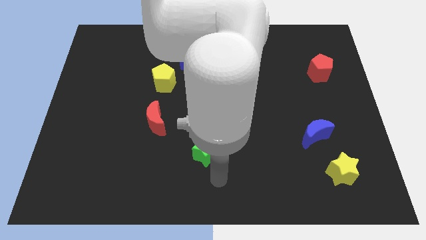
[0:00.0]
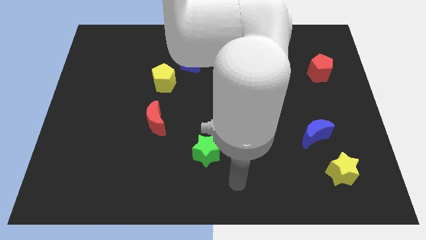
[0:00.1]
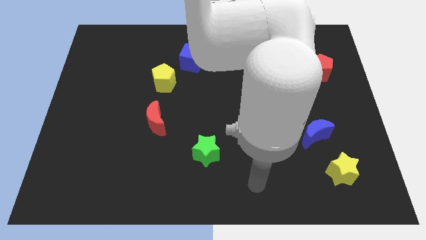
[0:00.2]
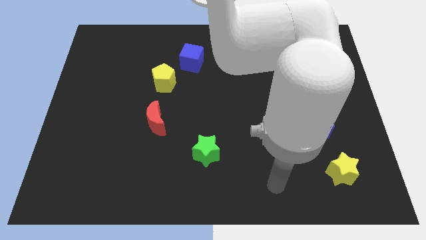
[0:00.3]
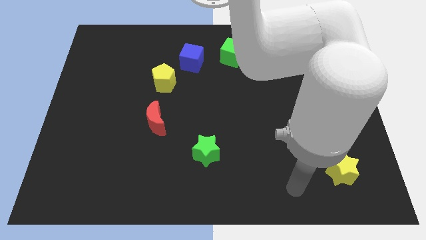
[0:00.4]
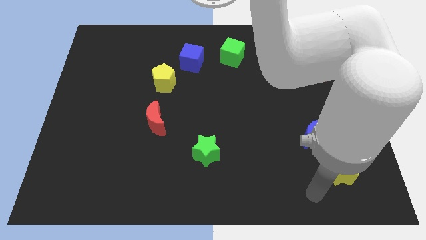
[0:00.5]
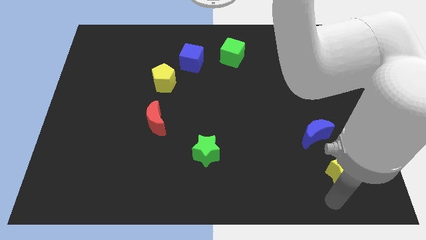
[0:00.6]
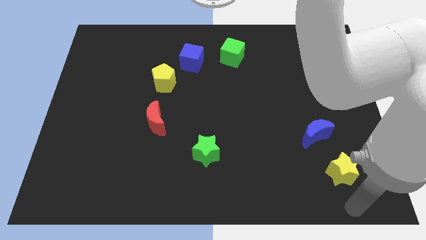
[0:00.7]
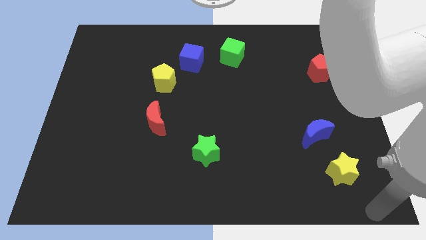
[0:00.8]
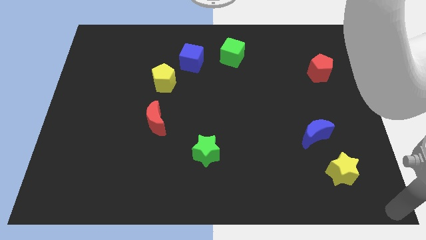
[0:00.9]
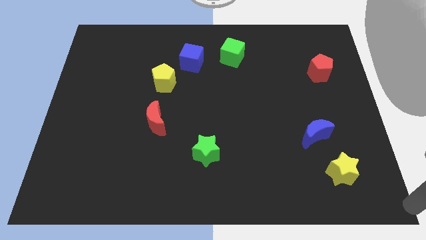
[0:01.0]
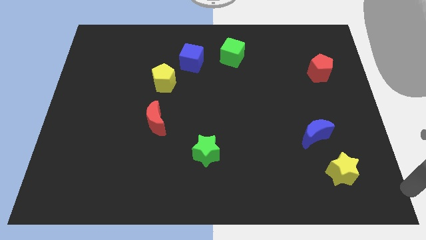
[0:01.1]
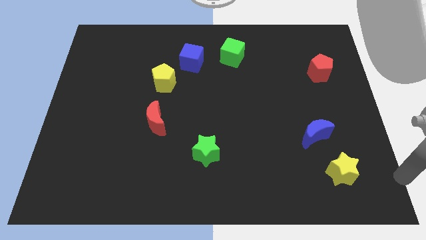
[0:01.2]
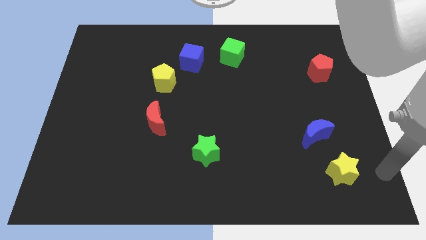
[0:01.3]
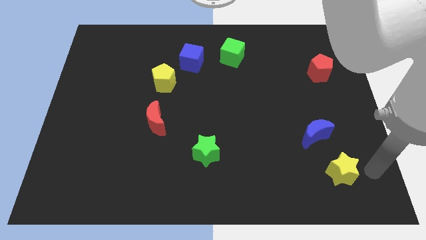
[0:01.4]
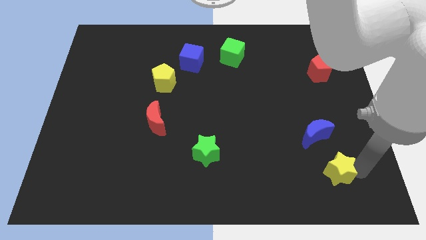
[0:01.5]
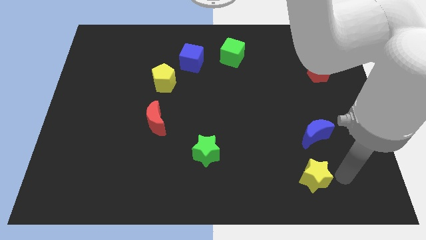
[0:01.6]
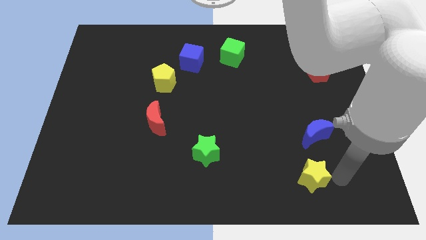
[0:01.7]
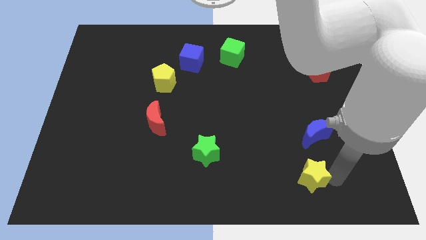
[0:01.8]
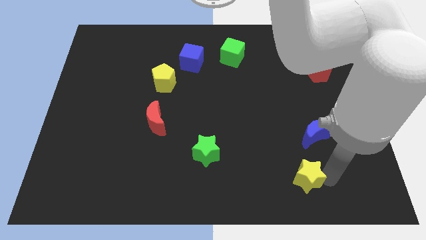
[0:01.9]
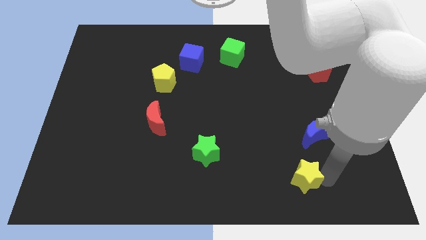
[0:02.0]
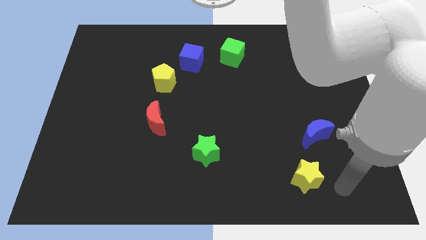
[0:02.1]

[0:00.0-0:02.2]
move he yellow star at the bottom of the blue crescent

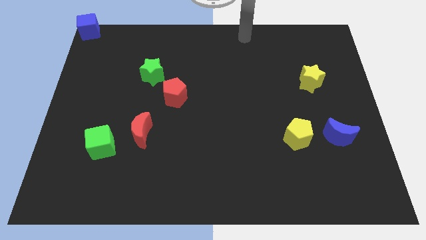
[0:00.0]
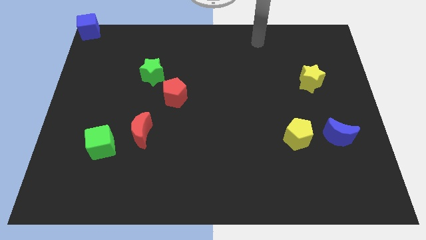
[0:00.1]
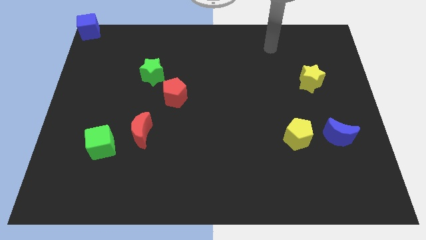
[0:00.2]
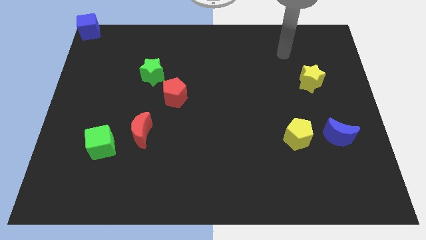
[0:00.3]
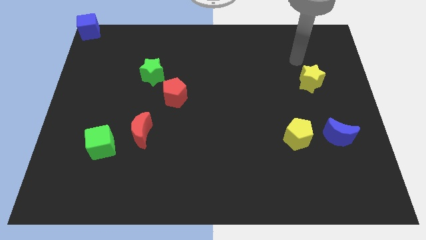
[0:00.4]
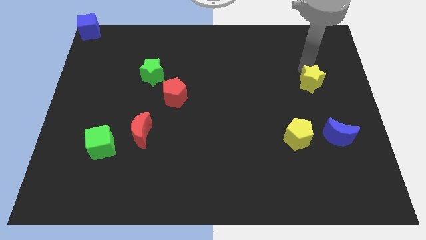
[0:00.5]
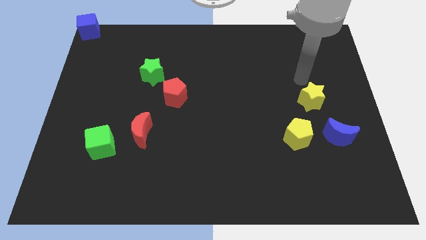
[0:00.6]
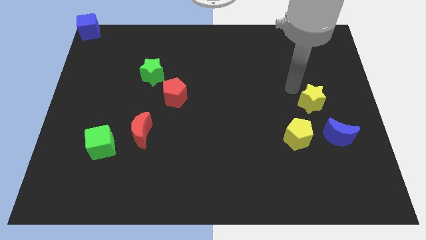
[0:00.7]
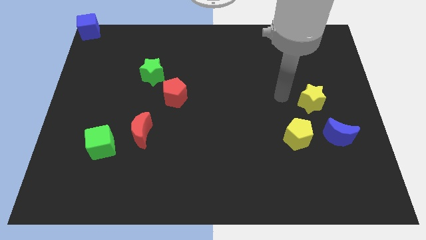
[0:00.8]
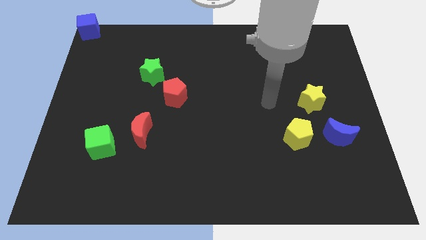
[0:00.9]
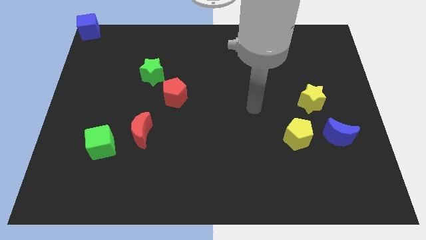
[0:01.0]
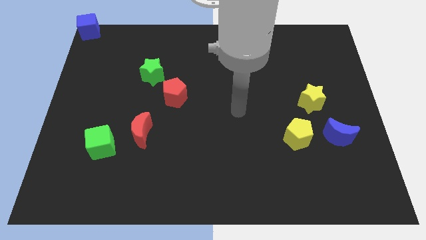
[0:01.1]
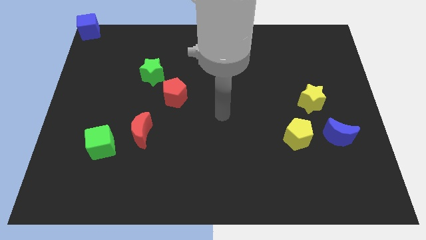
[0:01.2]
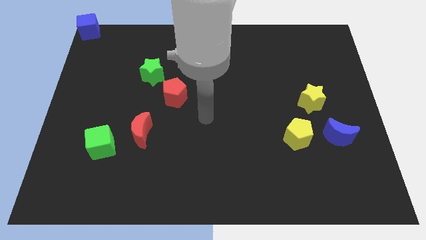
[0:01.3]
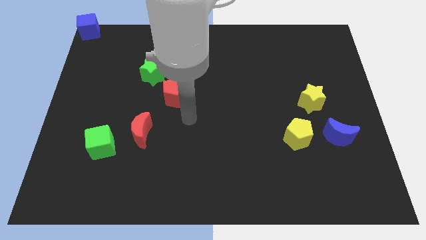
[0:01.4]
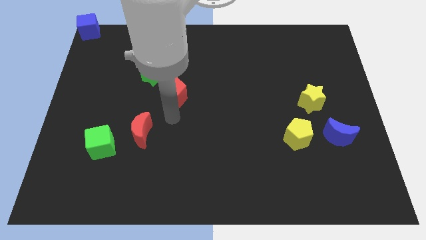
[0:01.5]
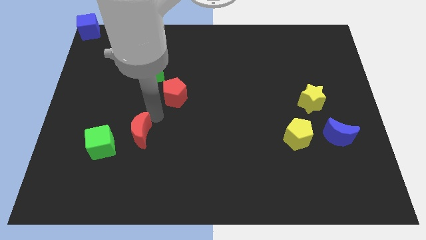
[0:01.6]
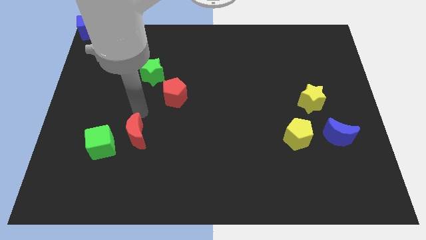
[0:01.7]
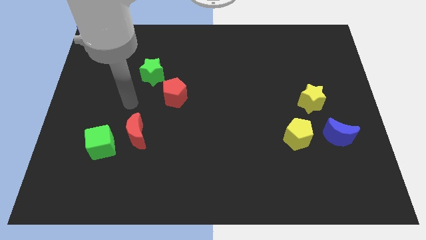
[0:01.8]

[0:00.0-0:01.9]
slightly push the yellow star to middle right of the board

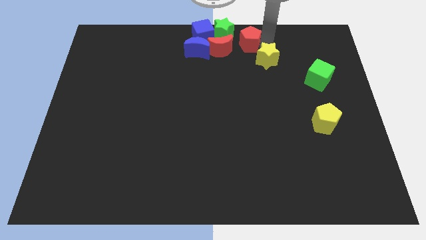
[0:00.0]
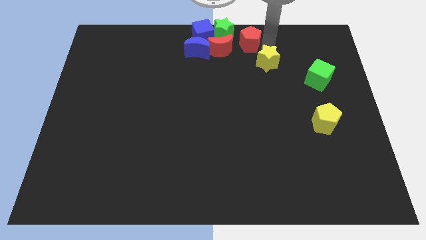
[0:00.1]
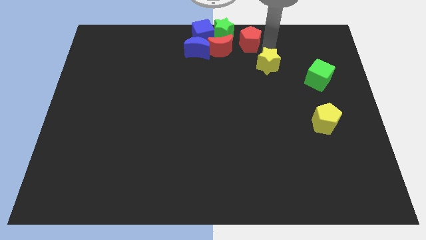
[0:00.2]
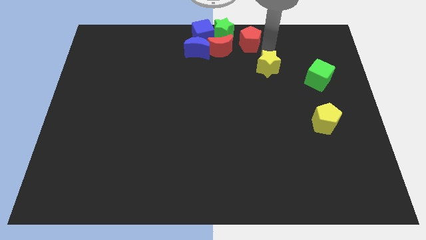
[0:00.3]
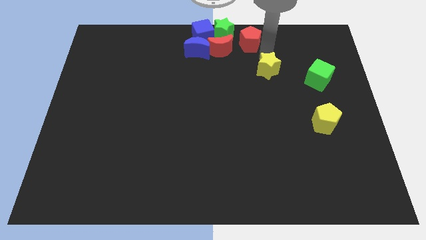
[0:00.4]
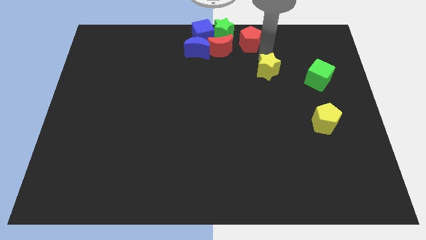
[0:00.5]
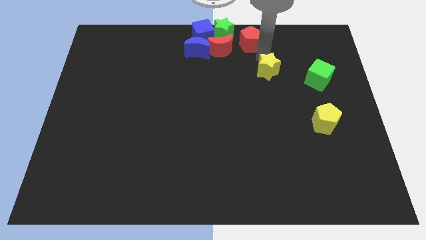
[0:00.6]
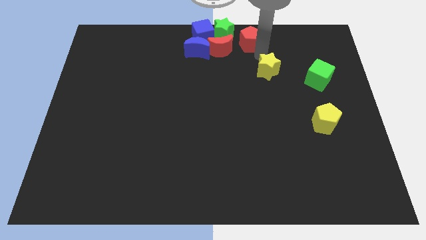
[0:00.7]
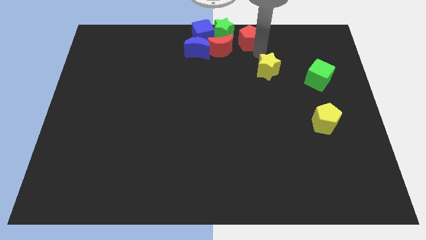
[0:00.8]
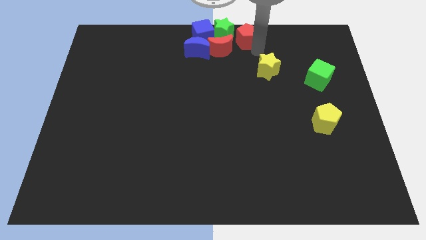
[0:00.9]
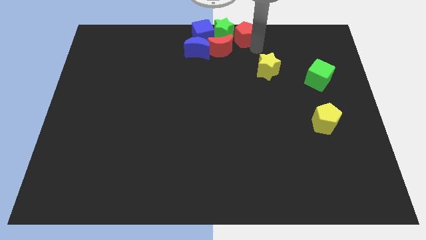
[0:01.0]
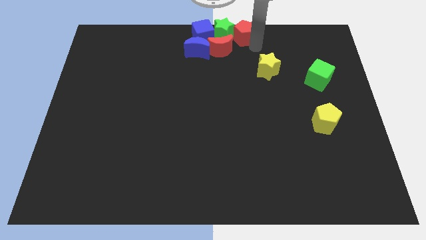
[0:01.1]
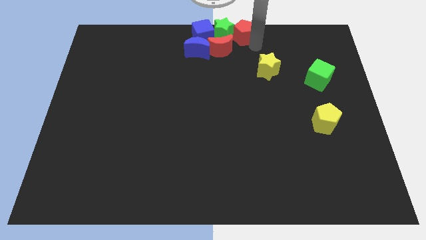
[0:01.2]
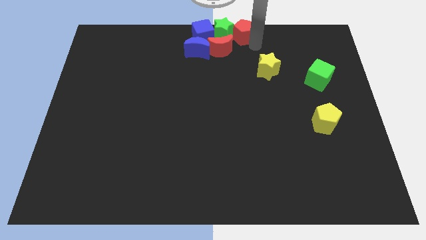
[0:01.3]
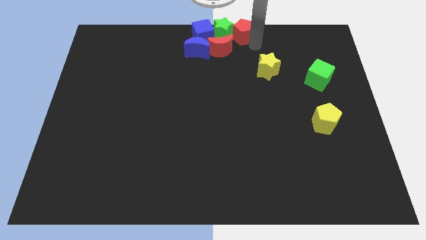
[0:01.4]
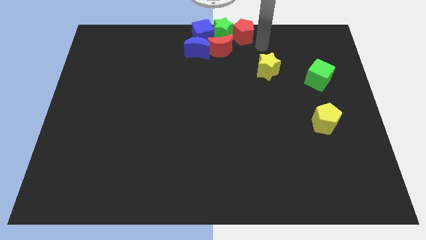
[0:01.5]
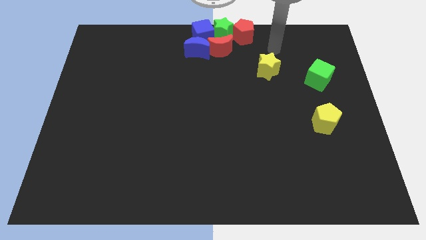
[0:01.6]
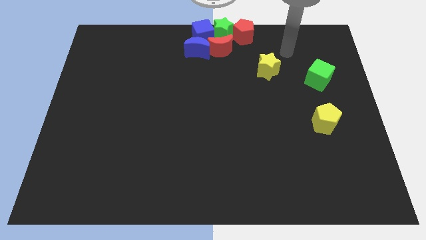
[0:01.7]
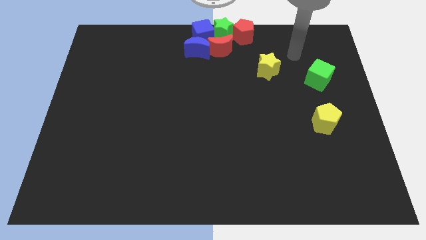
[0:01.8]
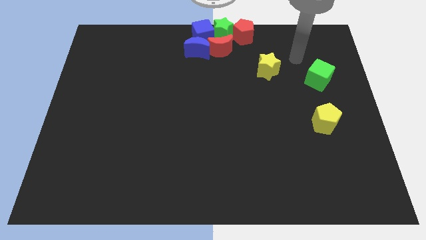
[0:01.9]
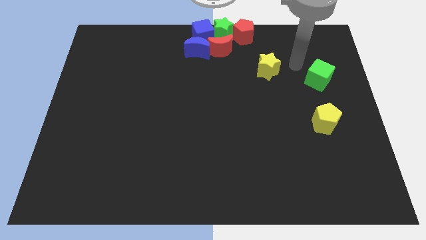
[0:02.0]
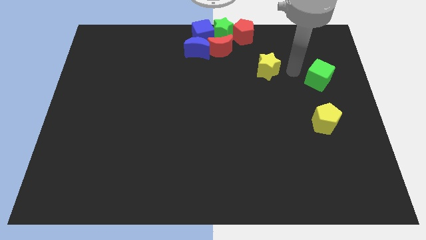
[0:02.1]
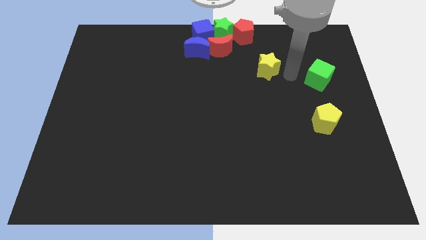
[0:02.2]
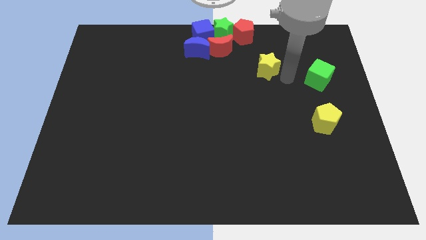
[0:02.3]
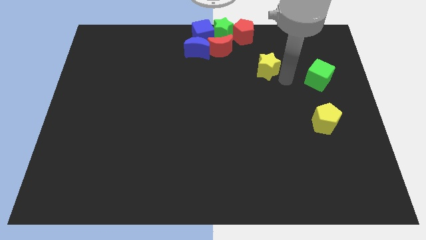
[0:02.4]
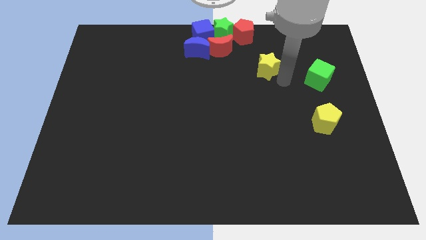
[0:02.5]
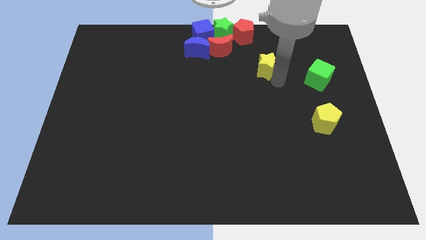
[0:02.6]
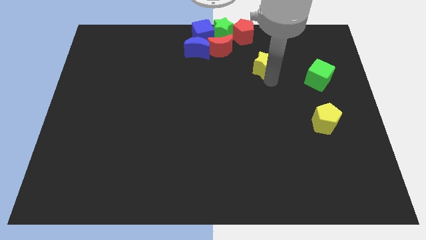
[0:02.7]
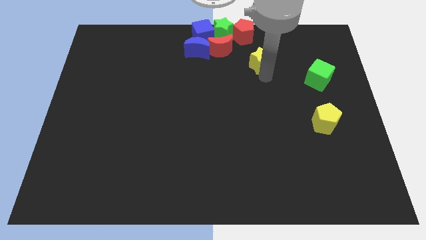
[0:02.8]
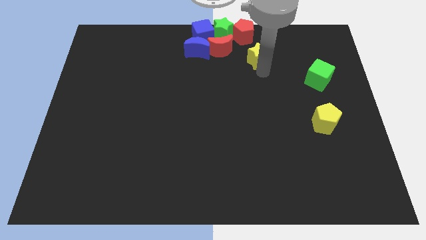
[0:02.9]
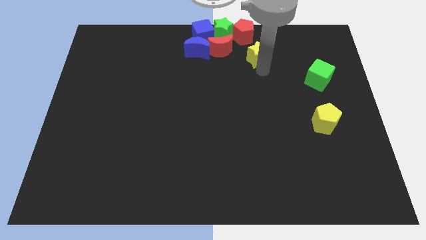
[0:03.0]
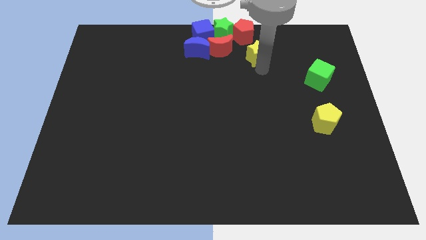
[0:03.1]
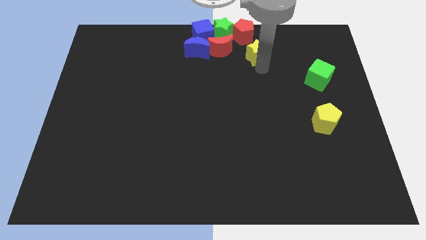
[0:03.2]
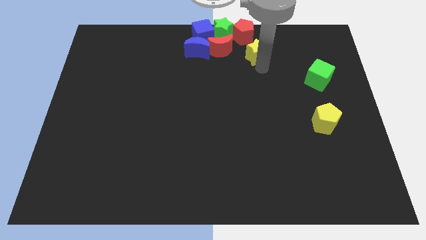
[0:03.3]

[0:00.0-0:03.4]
place the red pentagon right to the green star to form a horizontal line

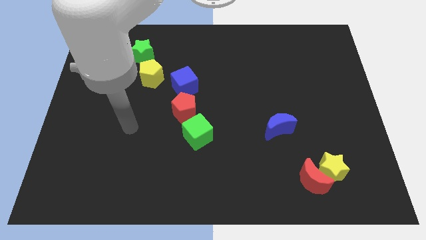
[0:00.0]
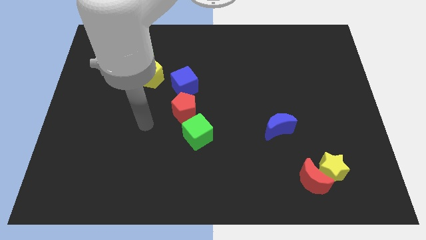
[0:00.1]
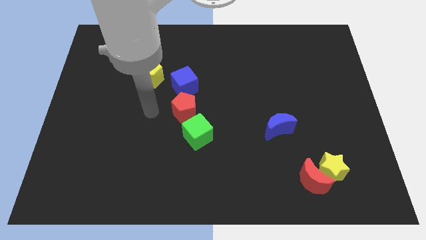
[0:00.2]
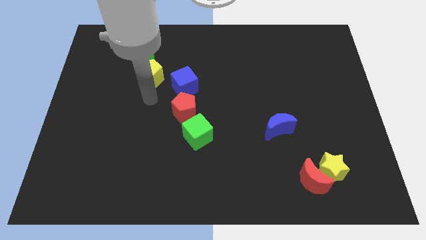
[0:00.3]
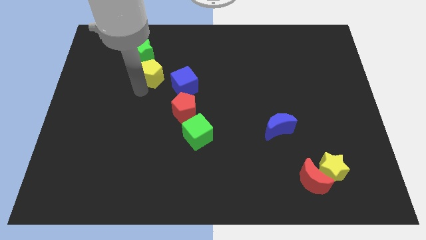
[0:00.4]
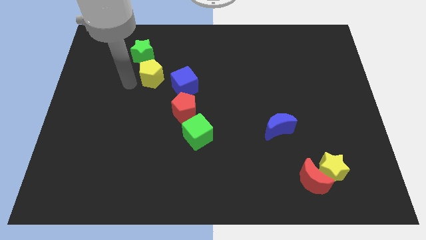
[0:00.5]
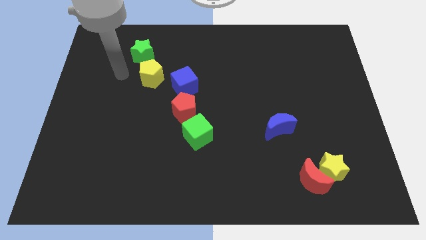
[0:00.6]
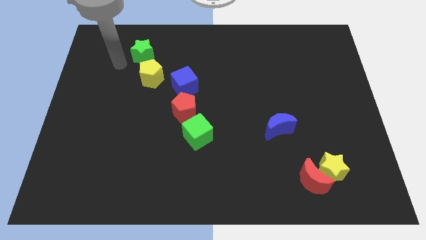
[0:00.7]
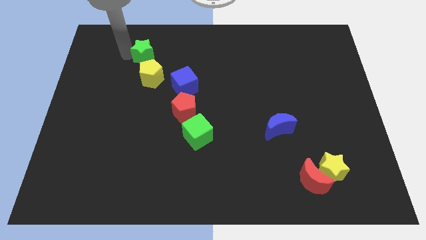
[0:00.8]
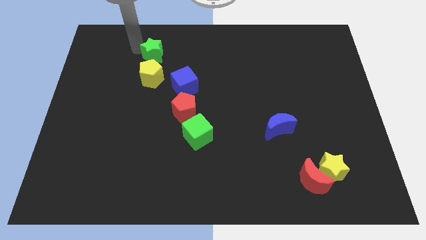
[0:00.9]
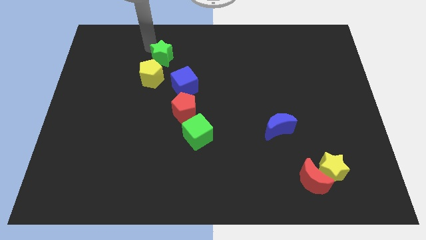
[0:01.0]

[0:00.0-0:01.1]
tap the green star

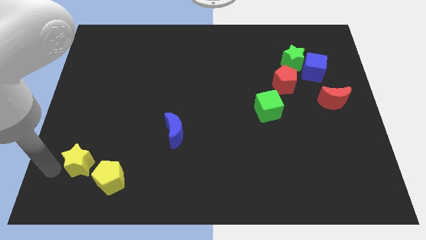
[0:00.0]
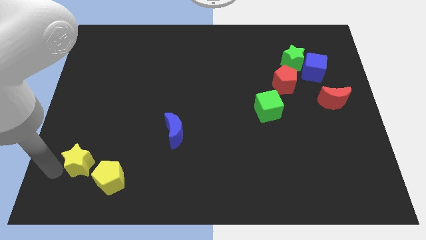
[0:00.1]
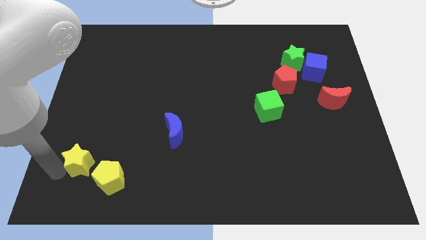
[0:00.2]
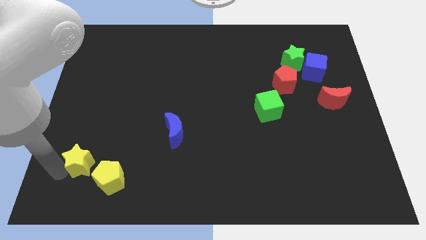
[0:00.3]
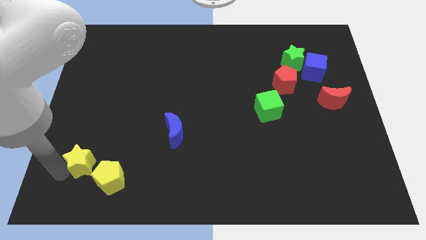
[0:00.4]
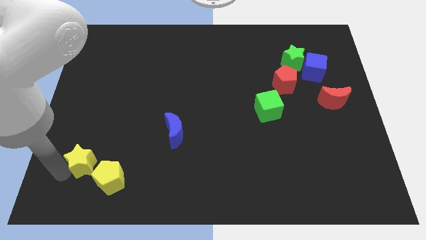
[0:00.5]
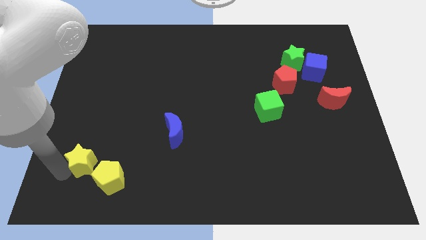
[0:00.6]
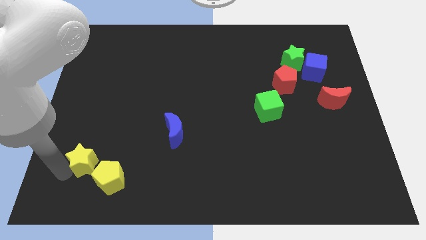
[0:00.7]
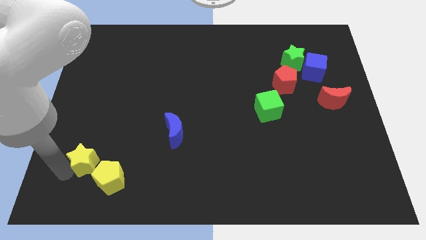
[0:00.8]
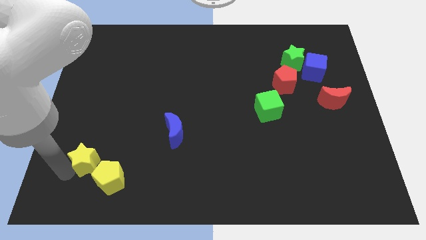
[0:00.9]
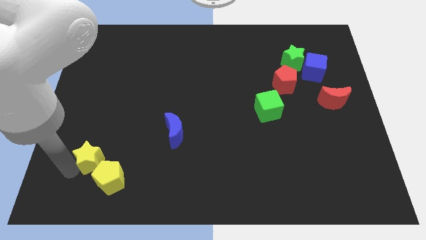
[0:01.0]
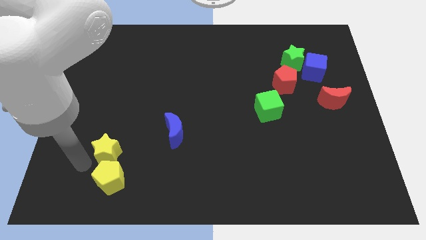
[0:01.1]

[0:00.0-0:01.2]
place yellow star above the yellow pentagon
